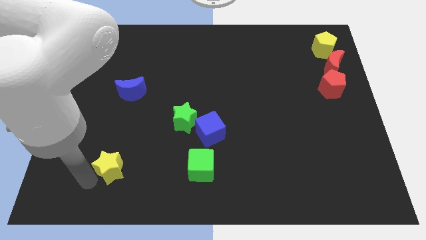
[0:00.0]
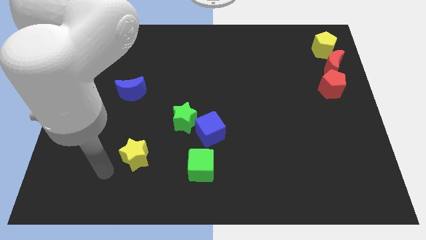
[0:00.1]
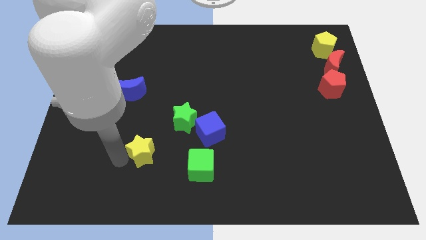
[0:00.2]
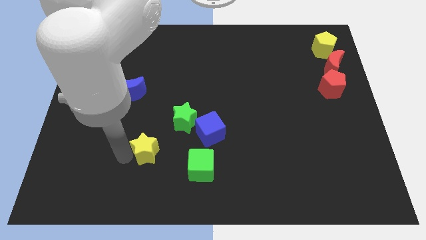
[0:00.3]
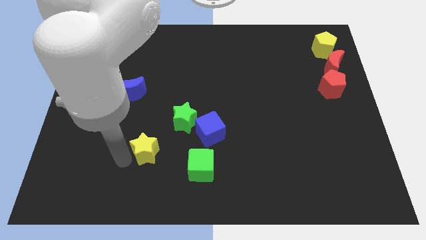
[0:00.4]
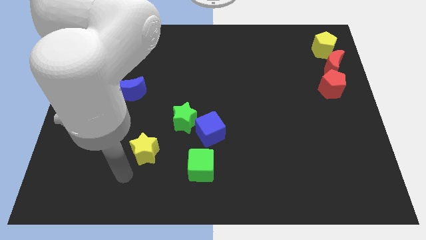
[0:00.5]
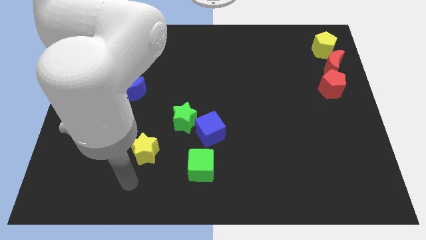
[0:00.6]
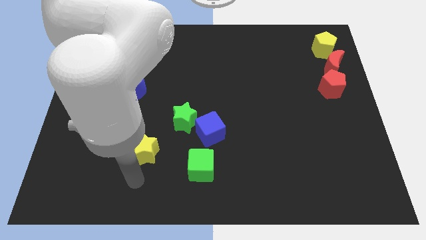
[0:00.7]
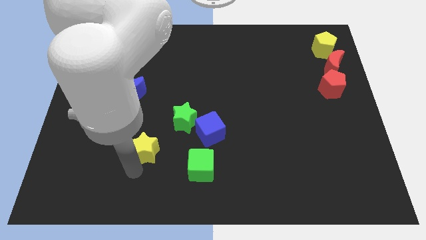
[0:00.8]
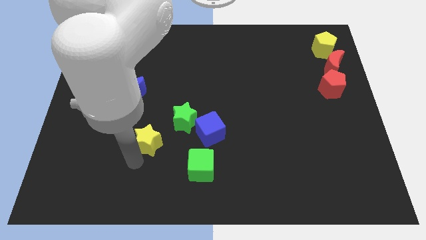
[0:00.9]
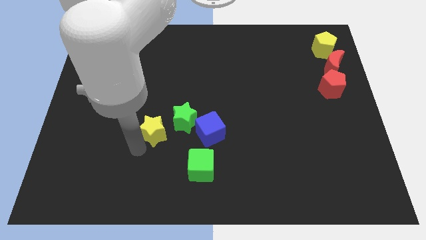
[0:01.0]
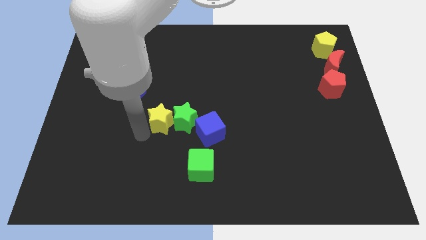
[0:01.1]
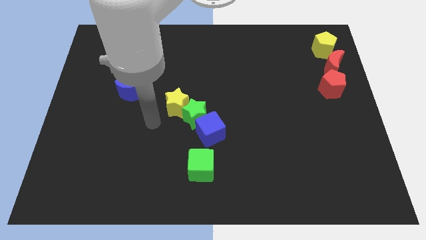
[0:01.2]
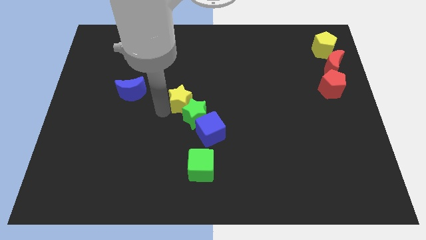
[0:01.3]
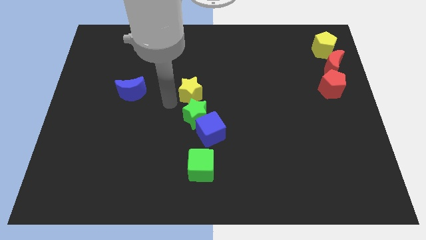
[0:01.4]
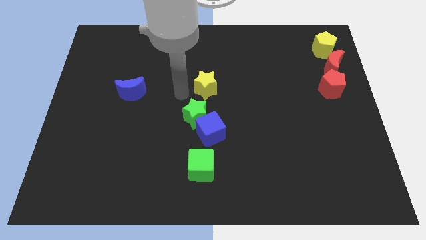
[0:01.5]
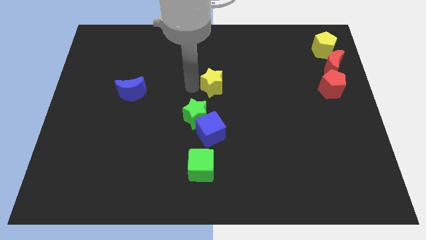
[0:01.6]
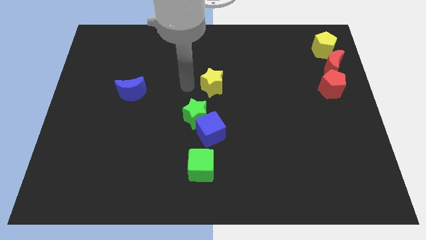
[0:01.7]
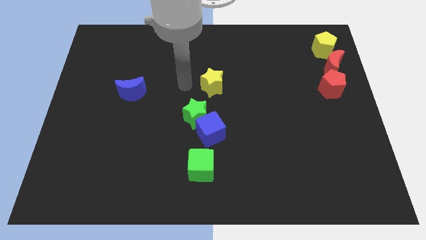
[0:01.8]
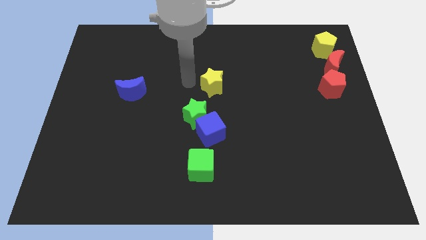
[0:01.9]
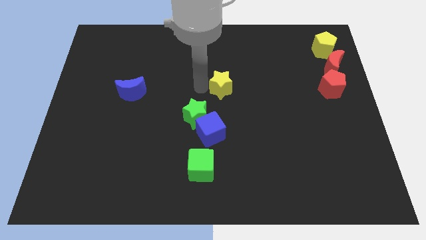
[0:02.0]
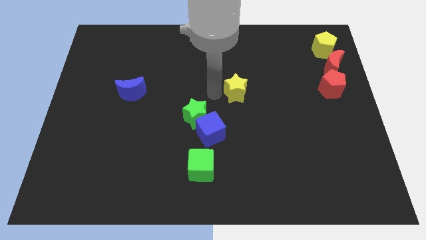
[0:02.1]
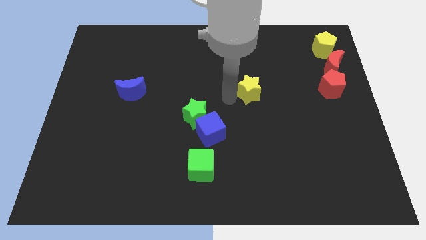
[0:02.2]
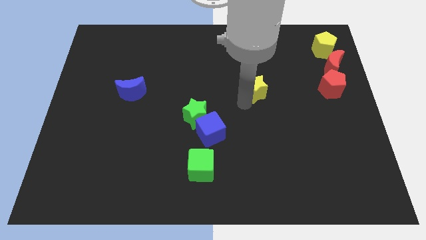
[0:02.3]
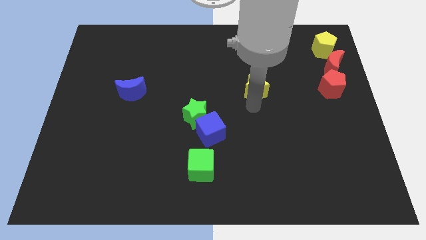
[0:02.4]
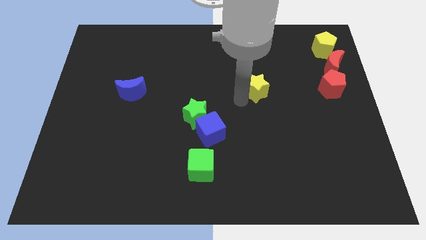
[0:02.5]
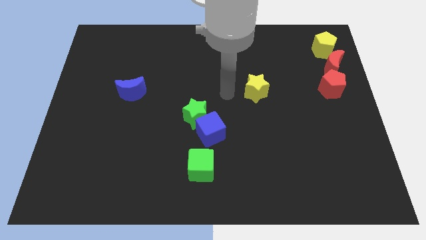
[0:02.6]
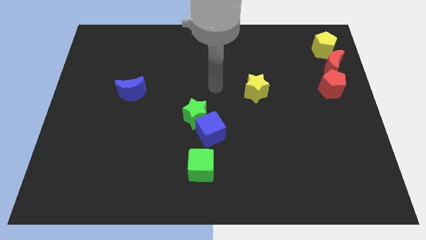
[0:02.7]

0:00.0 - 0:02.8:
slide yellow star between green star and red moon

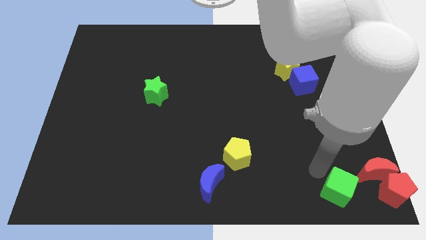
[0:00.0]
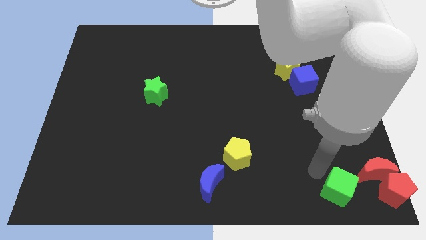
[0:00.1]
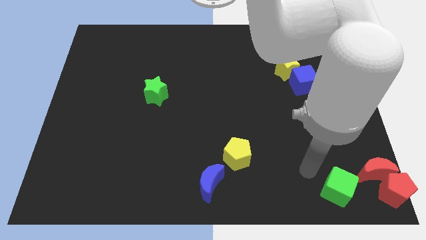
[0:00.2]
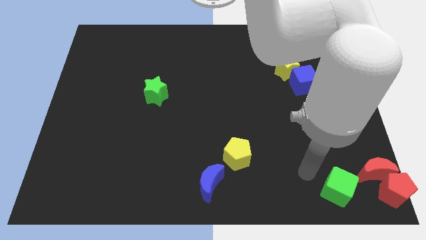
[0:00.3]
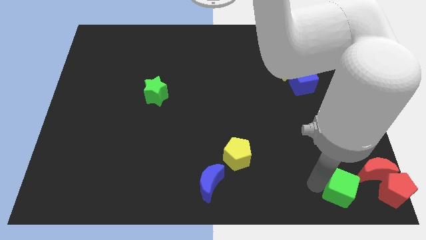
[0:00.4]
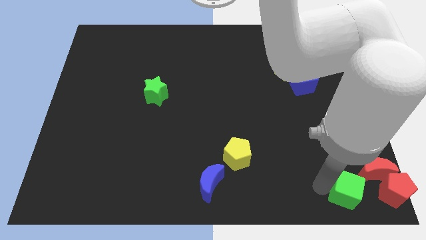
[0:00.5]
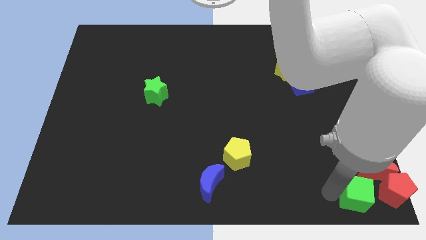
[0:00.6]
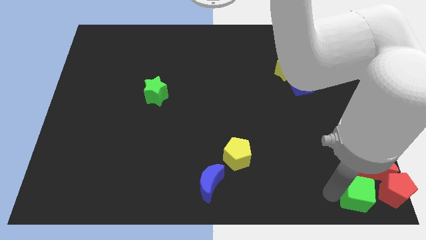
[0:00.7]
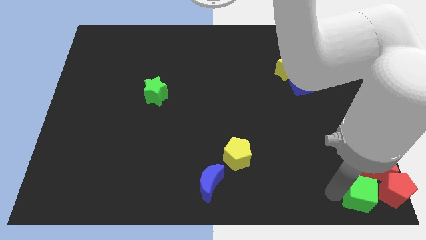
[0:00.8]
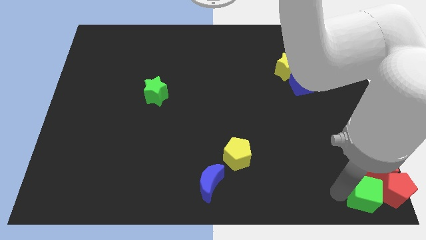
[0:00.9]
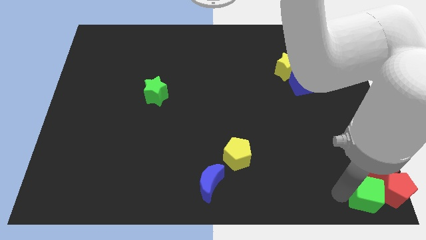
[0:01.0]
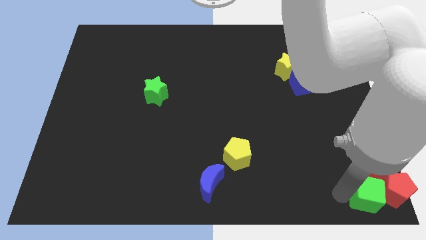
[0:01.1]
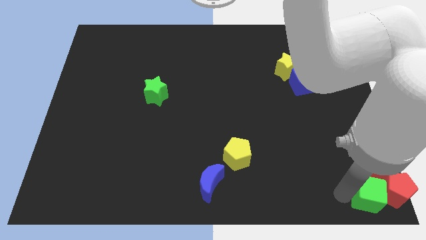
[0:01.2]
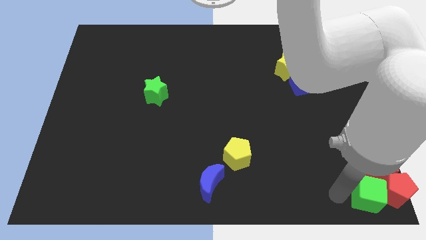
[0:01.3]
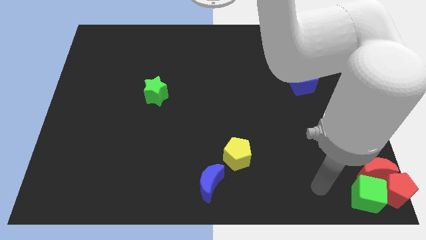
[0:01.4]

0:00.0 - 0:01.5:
push green cube beside red pentagon

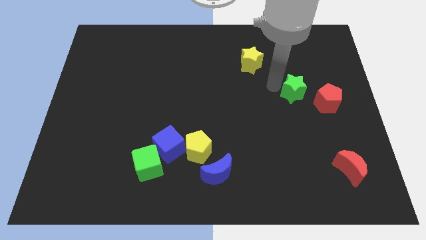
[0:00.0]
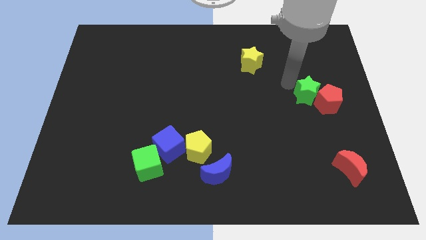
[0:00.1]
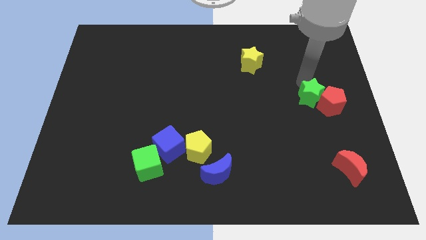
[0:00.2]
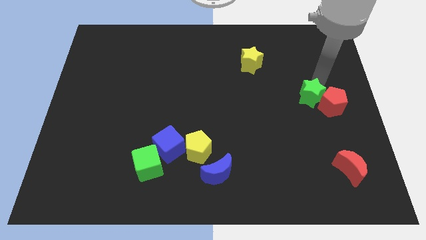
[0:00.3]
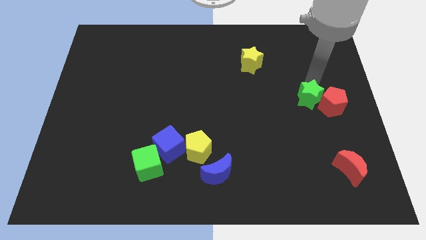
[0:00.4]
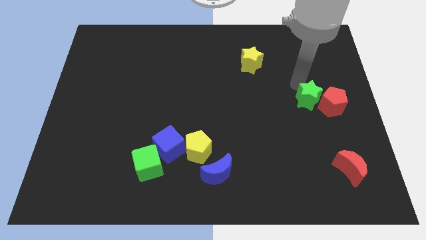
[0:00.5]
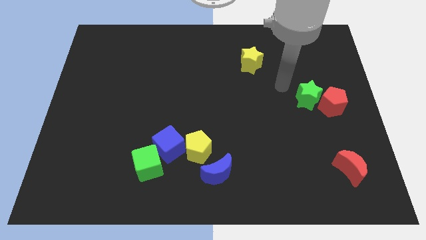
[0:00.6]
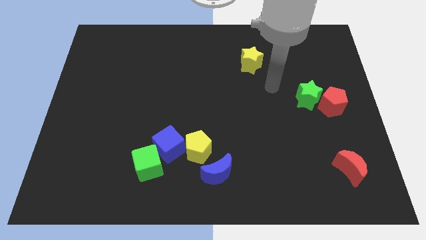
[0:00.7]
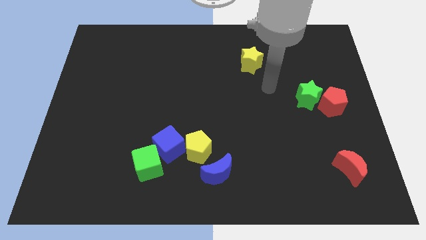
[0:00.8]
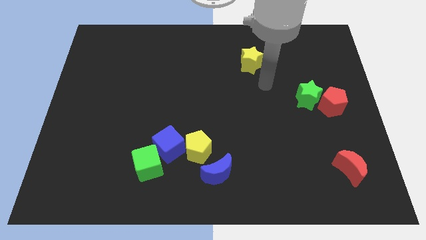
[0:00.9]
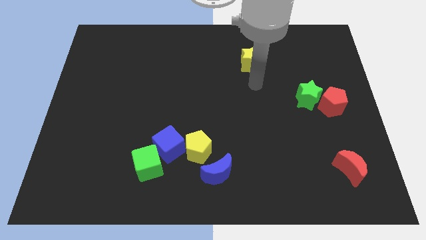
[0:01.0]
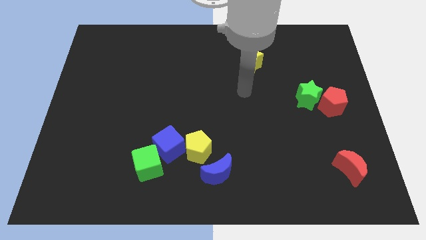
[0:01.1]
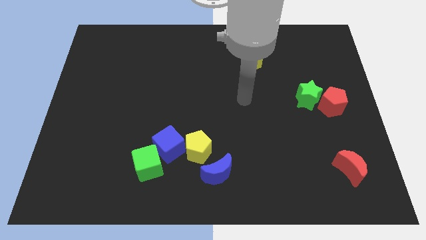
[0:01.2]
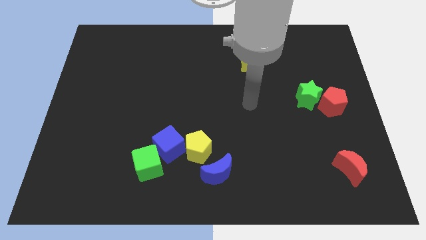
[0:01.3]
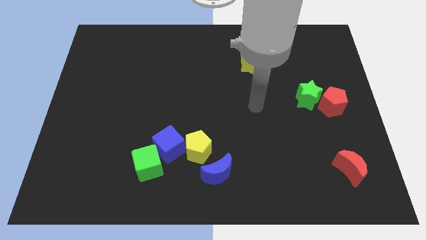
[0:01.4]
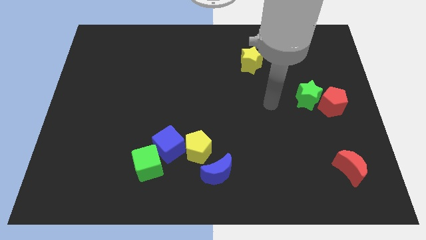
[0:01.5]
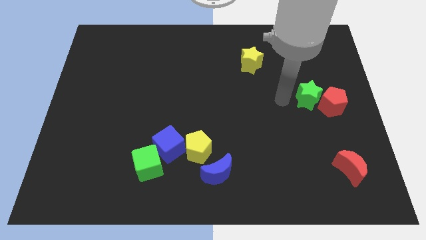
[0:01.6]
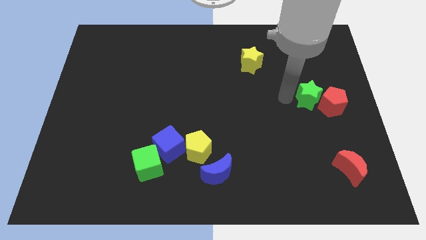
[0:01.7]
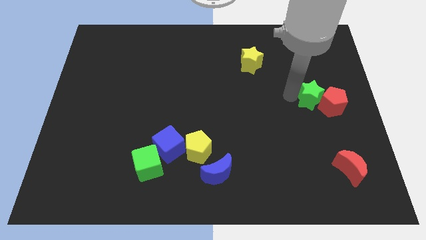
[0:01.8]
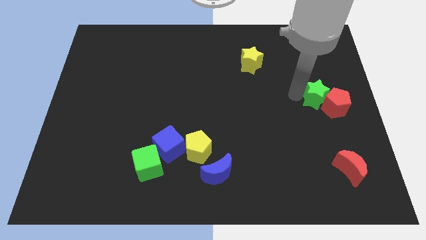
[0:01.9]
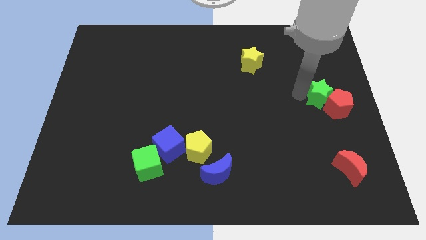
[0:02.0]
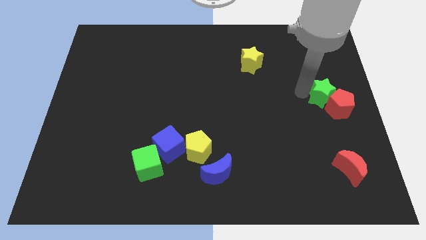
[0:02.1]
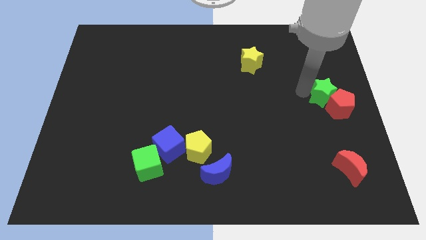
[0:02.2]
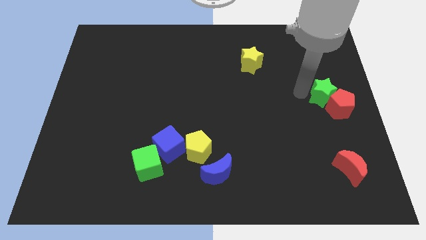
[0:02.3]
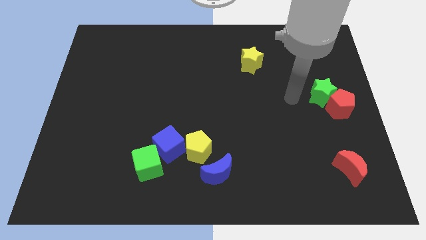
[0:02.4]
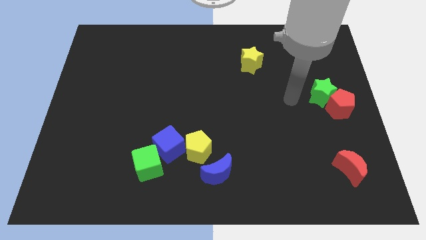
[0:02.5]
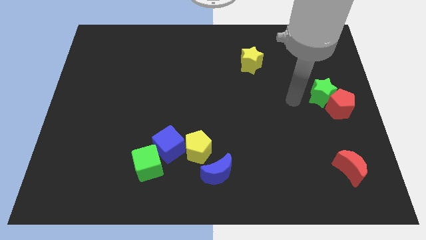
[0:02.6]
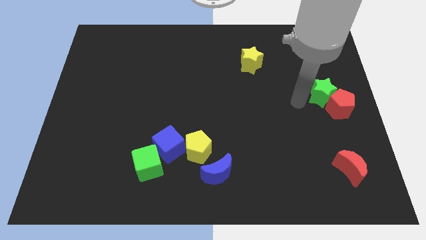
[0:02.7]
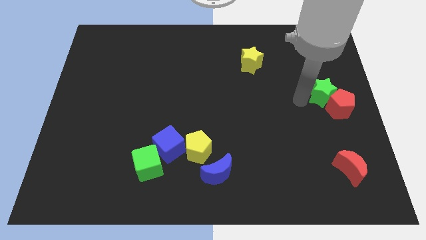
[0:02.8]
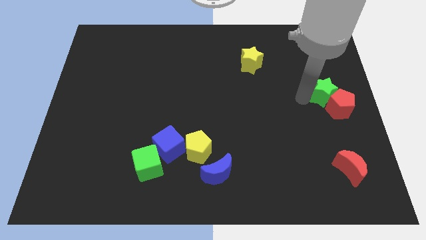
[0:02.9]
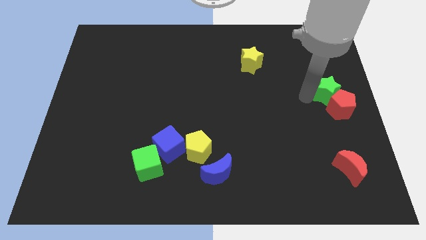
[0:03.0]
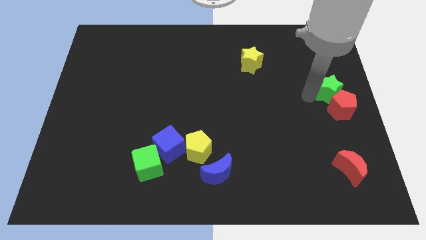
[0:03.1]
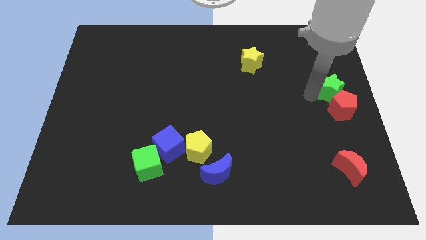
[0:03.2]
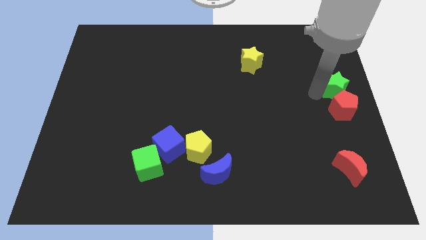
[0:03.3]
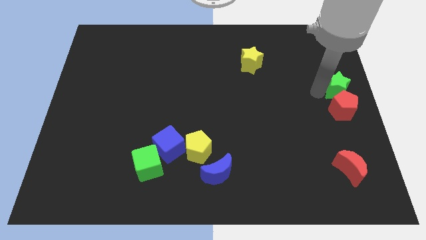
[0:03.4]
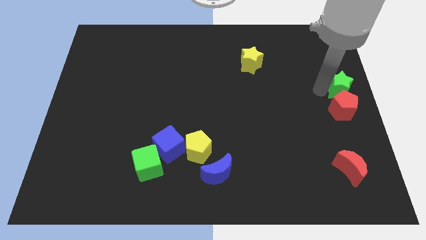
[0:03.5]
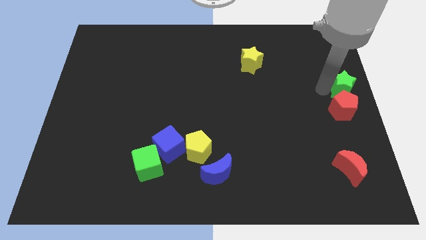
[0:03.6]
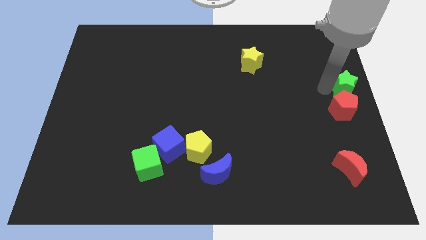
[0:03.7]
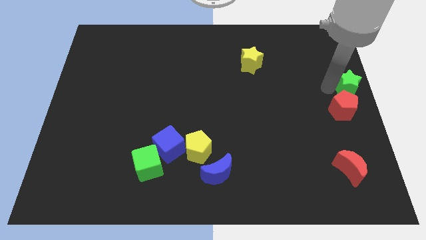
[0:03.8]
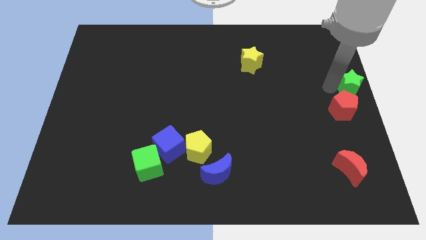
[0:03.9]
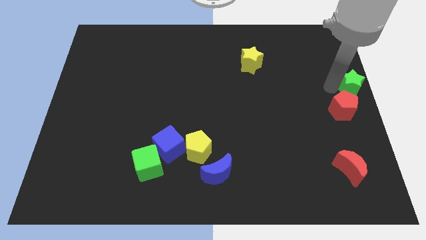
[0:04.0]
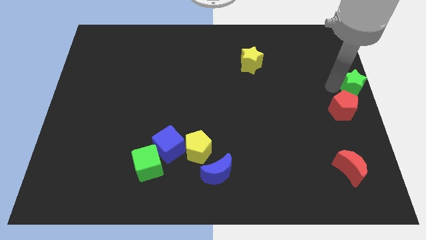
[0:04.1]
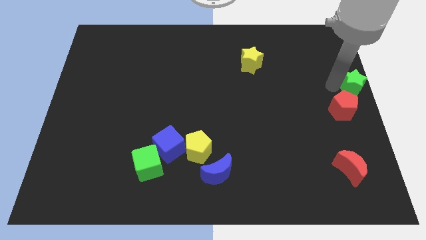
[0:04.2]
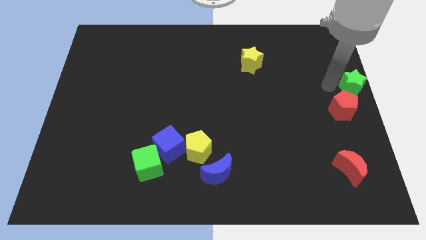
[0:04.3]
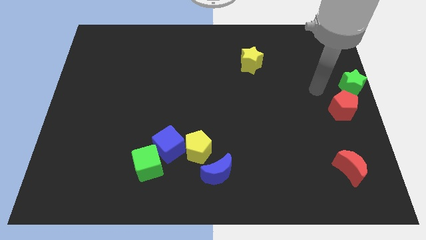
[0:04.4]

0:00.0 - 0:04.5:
push the green star to the top of the red pentagon
